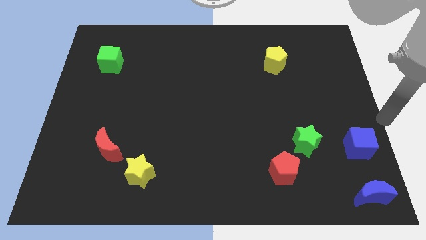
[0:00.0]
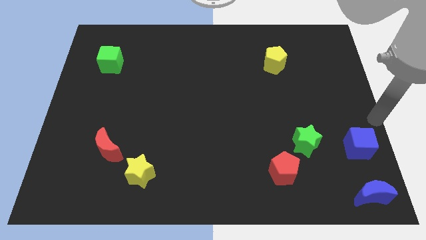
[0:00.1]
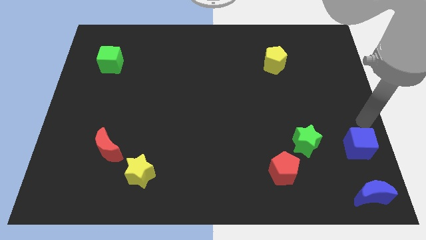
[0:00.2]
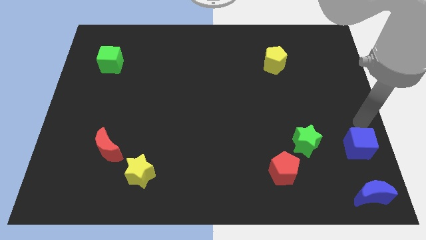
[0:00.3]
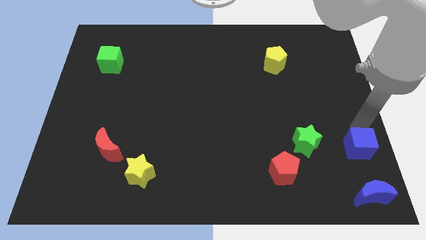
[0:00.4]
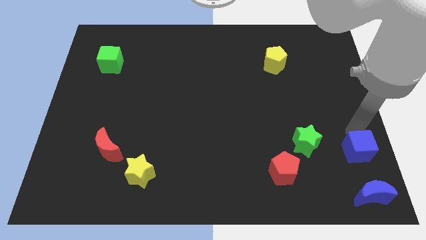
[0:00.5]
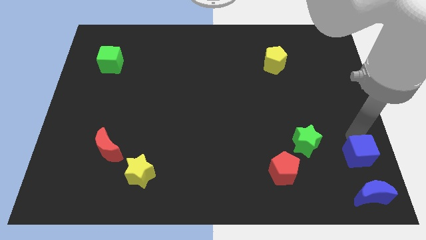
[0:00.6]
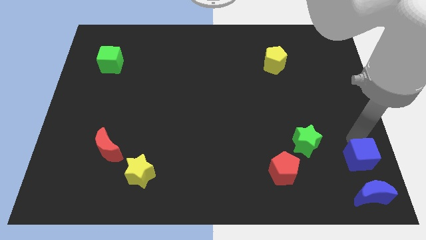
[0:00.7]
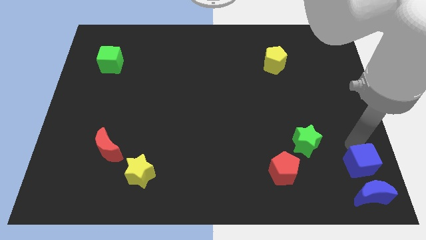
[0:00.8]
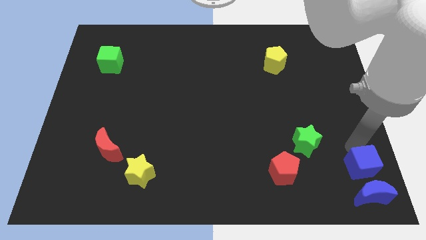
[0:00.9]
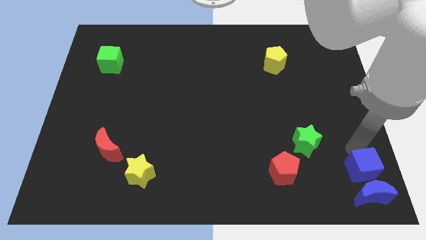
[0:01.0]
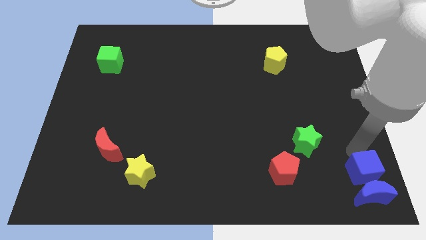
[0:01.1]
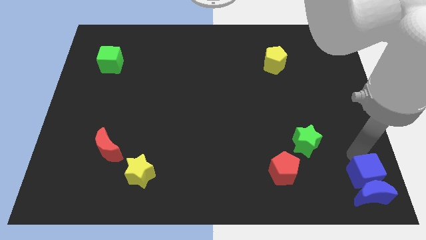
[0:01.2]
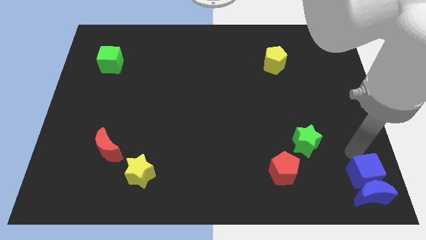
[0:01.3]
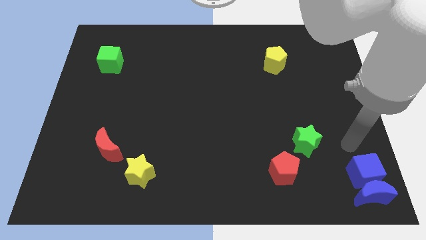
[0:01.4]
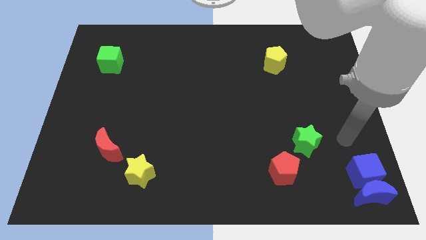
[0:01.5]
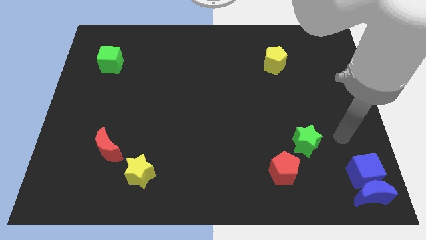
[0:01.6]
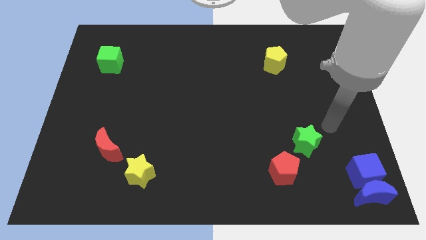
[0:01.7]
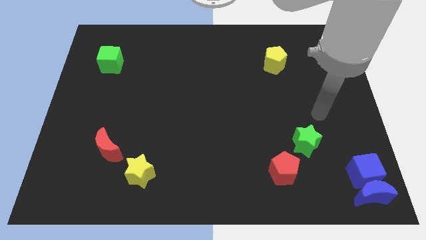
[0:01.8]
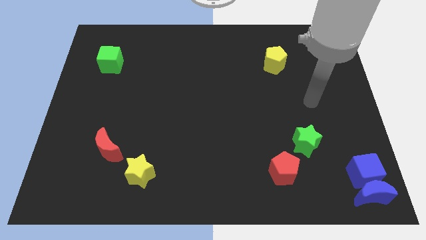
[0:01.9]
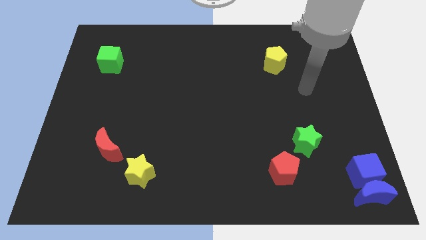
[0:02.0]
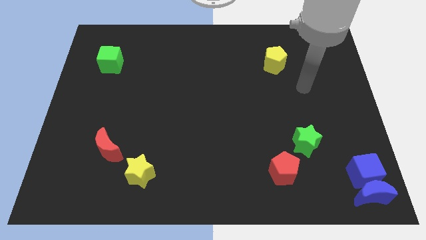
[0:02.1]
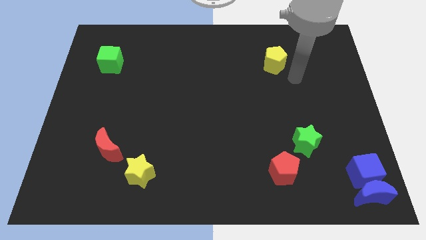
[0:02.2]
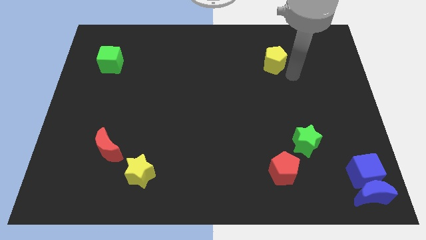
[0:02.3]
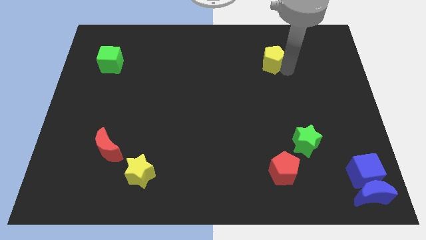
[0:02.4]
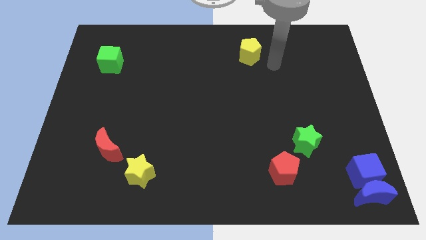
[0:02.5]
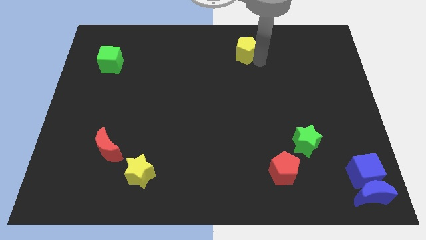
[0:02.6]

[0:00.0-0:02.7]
move the blue cube into the top of the blue moon

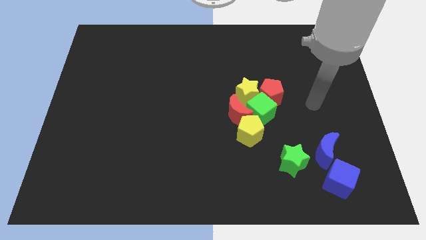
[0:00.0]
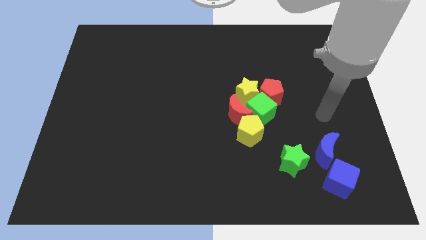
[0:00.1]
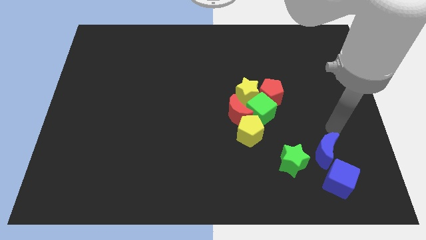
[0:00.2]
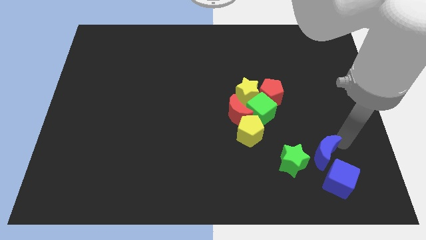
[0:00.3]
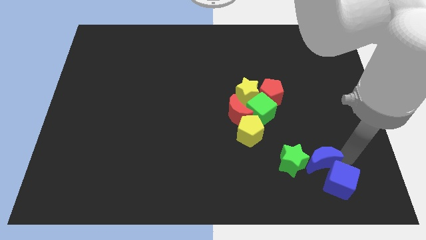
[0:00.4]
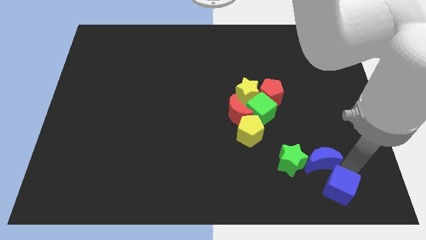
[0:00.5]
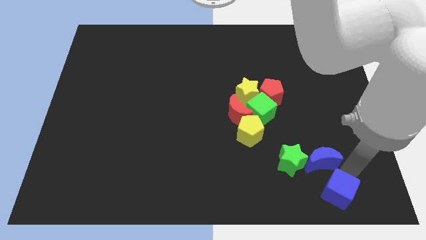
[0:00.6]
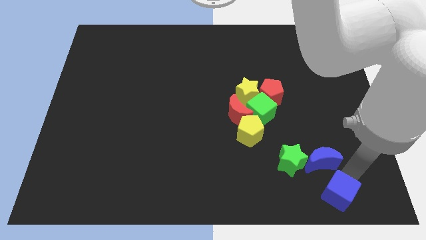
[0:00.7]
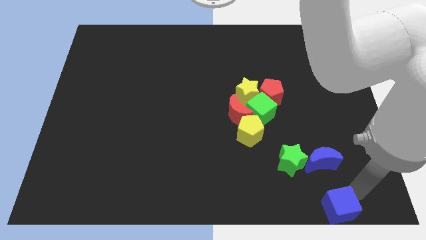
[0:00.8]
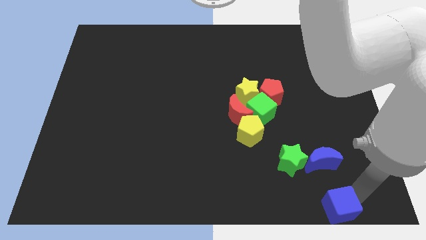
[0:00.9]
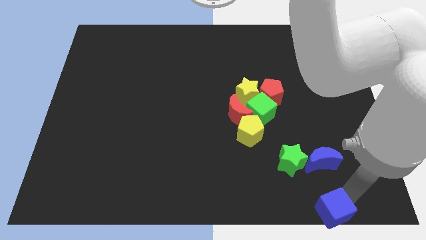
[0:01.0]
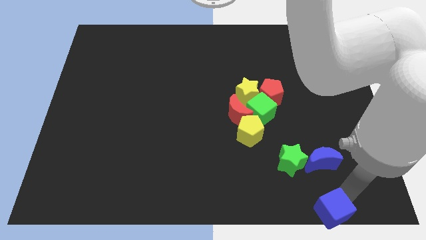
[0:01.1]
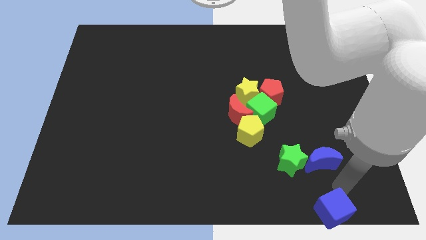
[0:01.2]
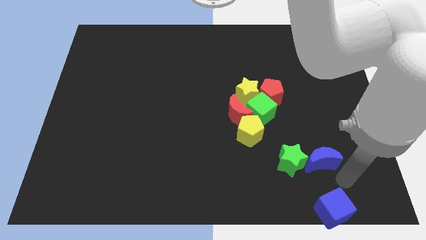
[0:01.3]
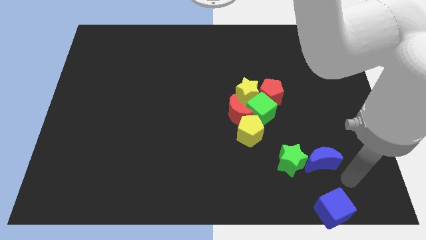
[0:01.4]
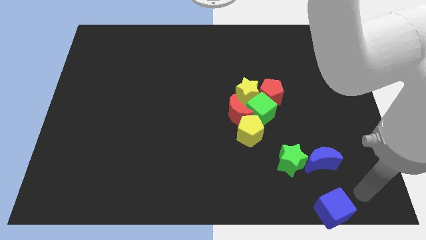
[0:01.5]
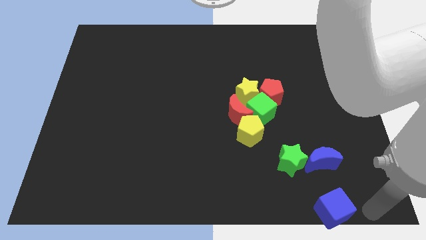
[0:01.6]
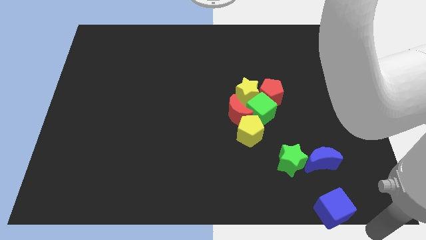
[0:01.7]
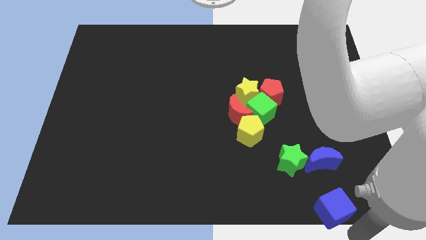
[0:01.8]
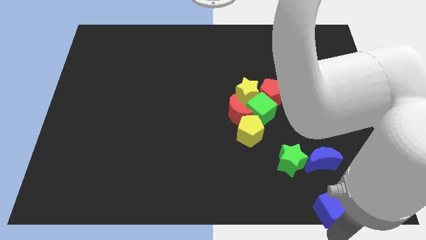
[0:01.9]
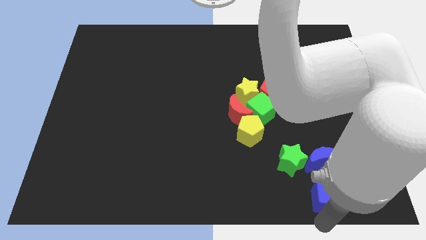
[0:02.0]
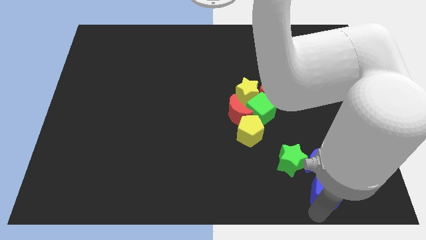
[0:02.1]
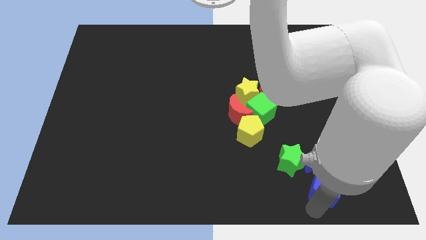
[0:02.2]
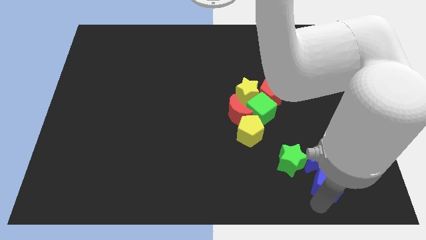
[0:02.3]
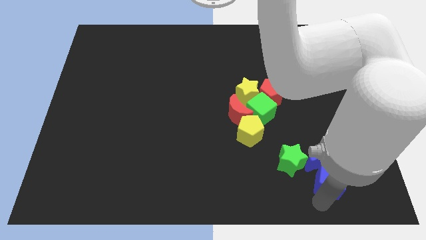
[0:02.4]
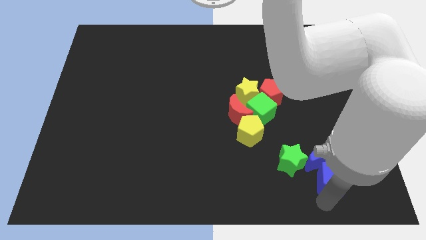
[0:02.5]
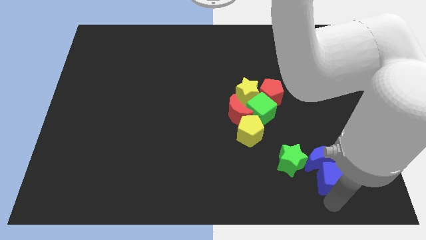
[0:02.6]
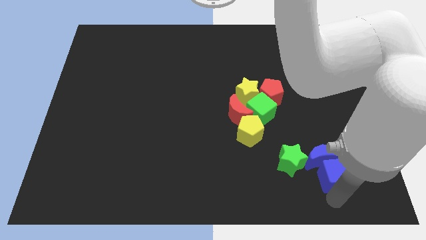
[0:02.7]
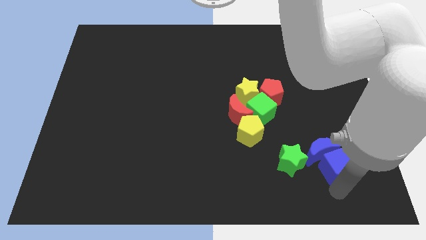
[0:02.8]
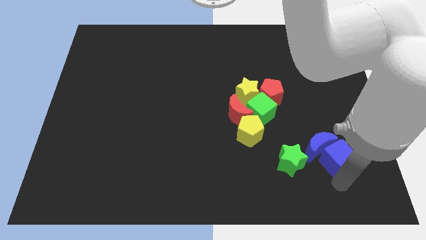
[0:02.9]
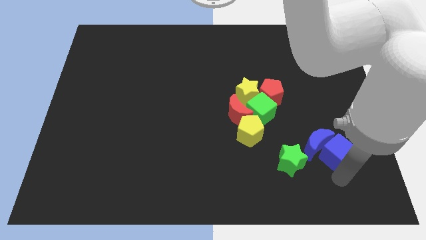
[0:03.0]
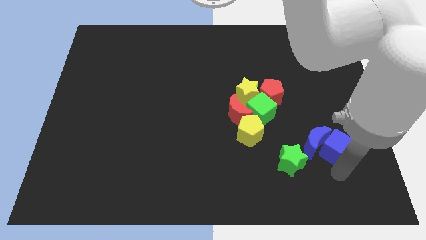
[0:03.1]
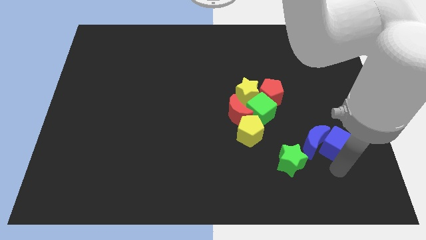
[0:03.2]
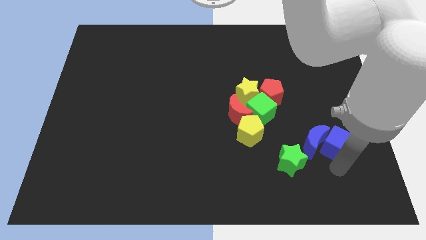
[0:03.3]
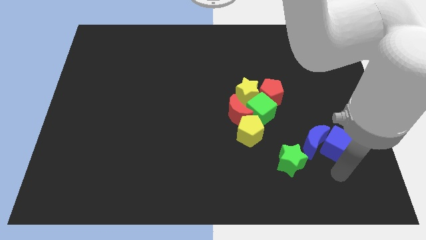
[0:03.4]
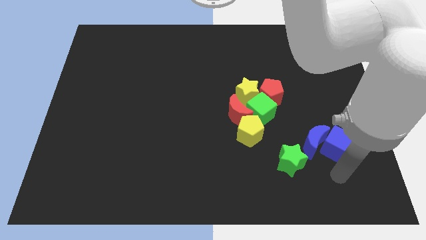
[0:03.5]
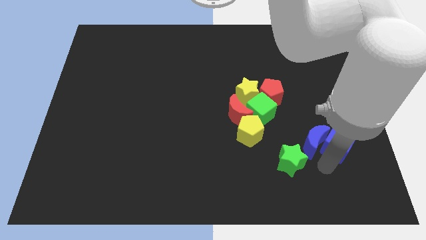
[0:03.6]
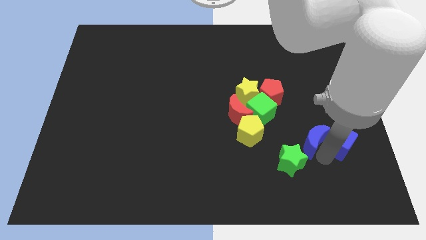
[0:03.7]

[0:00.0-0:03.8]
move blue blocks slightly towards top

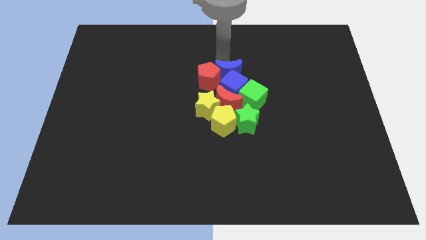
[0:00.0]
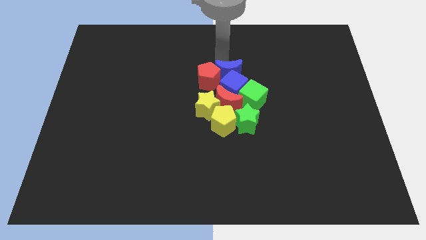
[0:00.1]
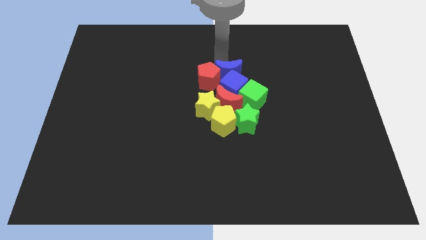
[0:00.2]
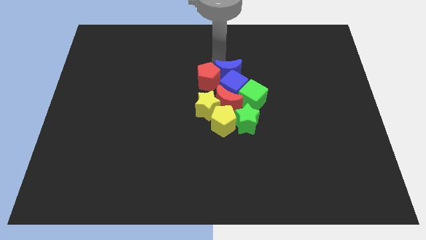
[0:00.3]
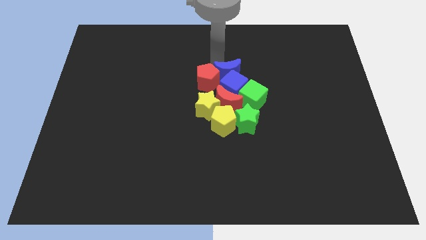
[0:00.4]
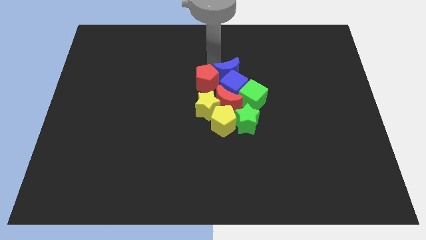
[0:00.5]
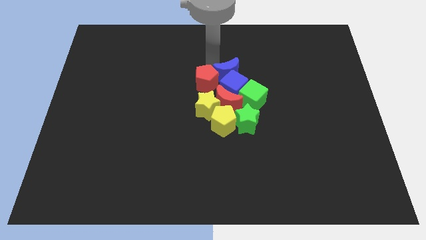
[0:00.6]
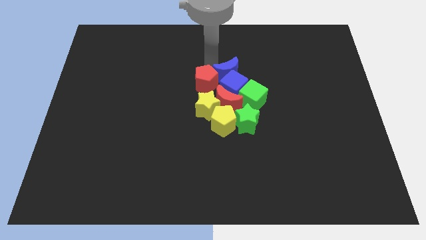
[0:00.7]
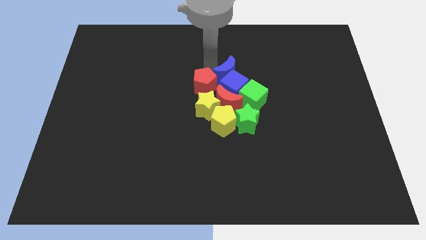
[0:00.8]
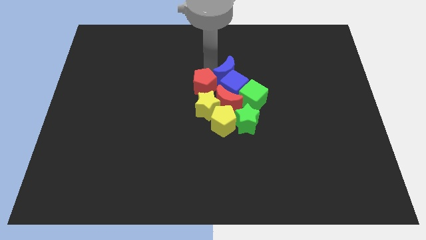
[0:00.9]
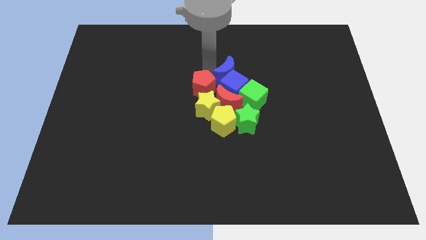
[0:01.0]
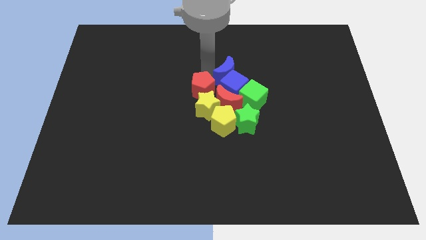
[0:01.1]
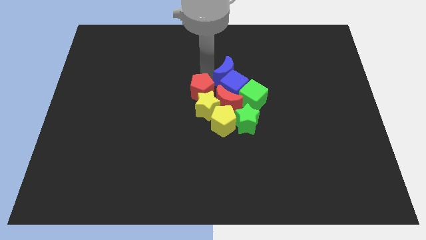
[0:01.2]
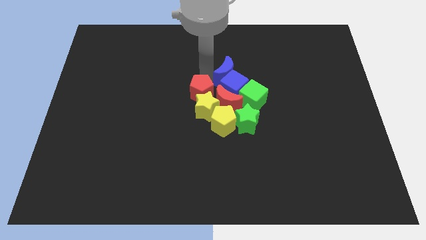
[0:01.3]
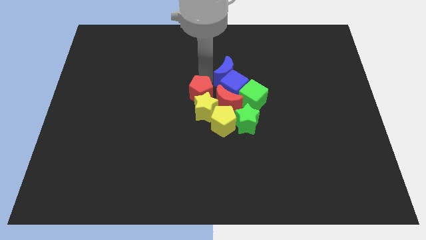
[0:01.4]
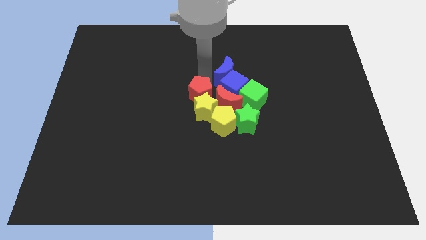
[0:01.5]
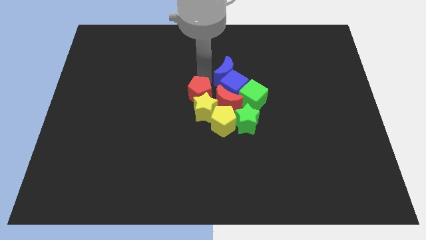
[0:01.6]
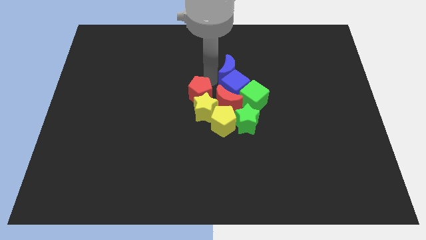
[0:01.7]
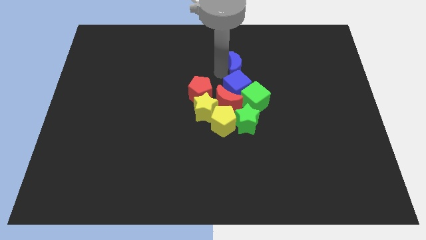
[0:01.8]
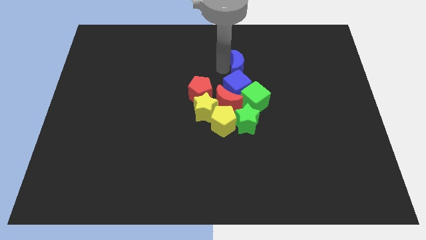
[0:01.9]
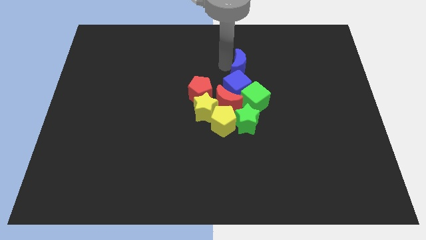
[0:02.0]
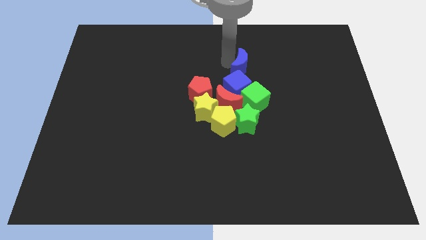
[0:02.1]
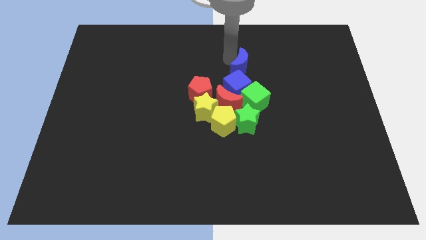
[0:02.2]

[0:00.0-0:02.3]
separate the red pentagon and the blue crescent

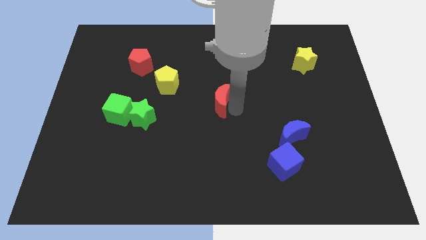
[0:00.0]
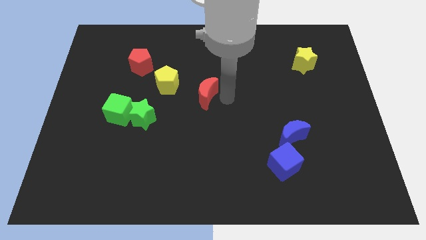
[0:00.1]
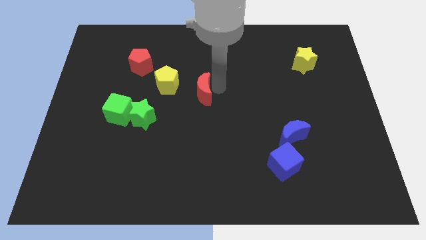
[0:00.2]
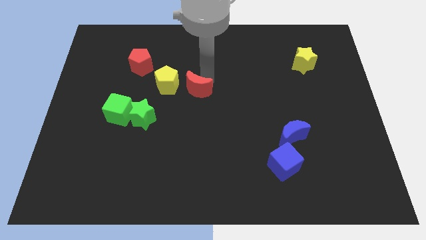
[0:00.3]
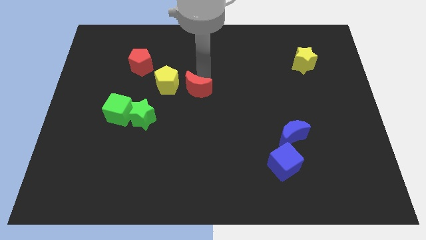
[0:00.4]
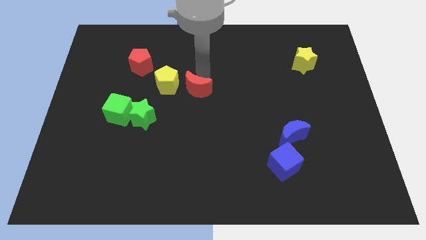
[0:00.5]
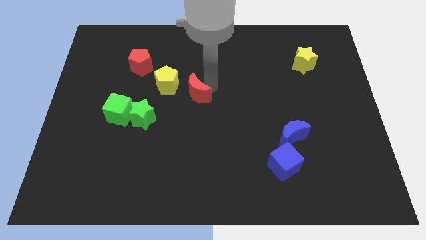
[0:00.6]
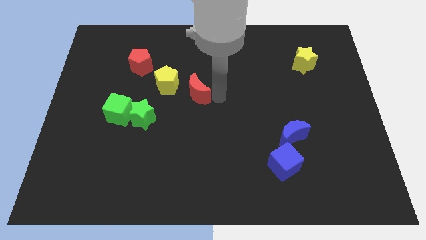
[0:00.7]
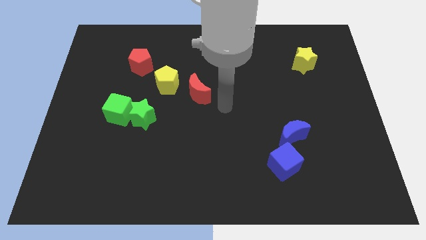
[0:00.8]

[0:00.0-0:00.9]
place the red crescent to the right side of the yellow pentagon
